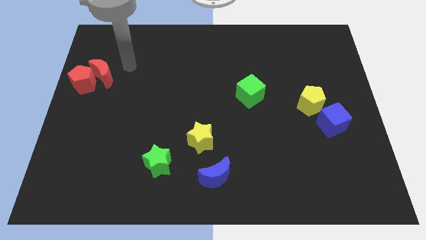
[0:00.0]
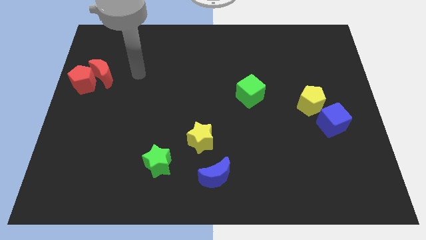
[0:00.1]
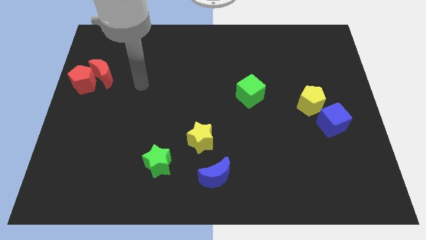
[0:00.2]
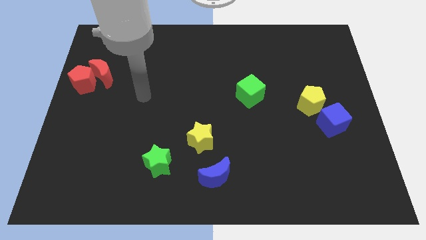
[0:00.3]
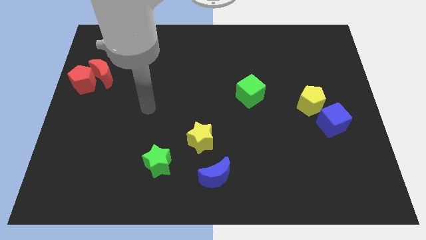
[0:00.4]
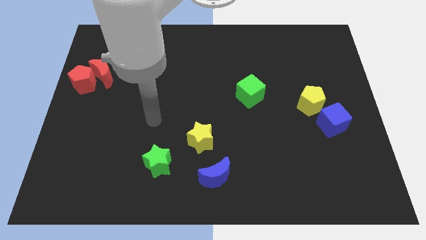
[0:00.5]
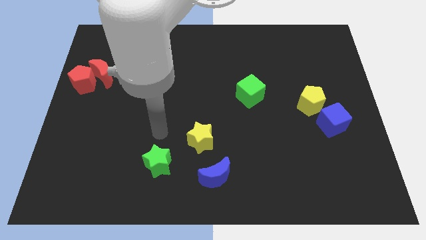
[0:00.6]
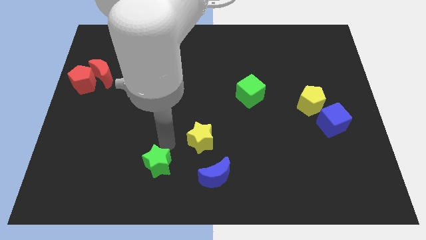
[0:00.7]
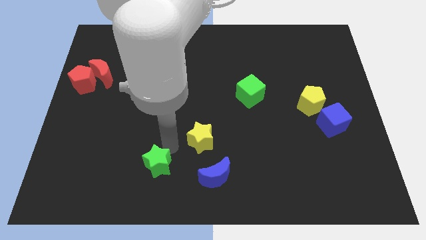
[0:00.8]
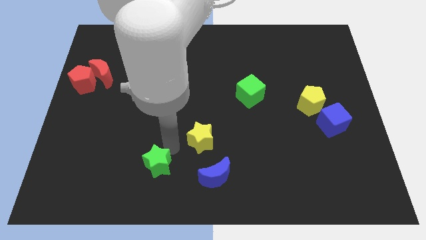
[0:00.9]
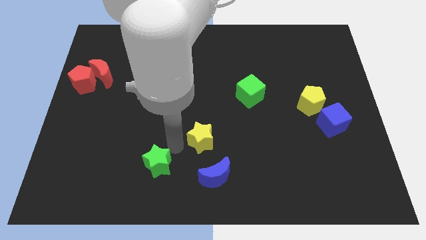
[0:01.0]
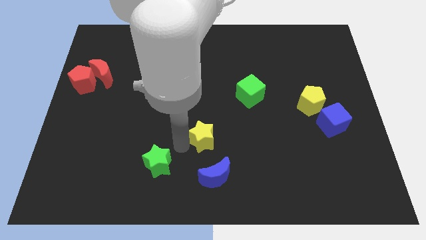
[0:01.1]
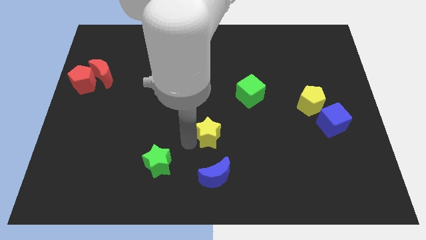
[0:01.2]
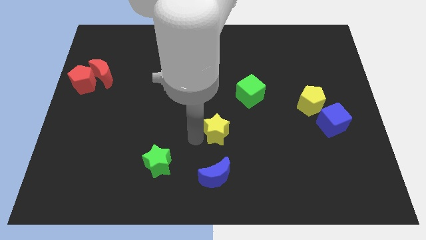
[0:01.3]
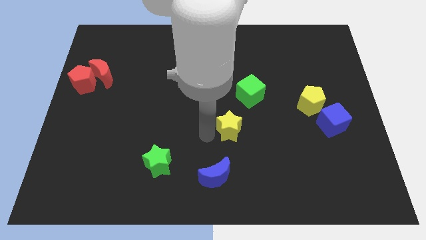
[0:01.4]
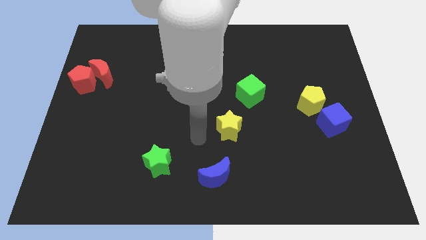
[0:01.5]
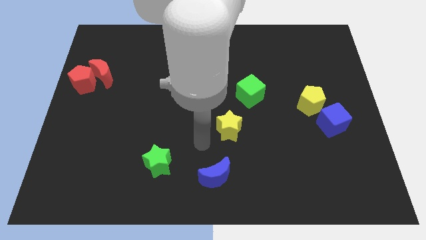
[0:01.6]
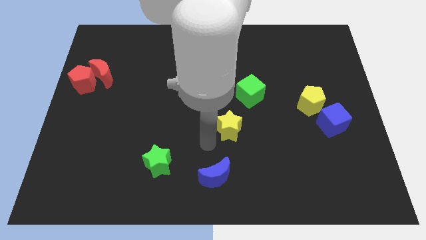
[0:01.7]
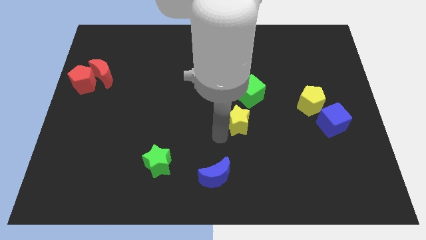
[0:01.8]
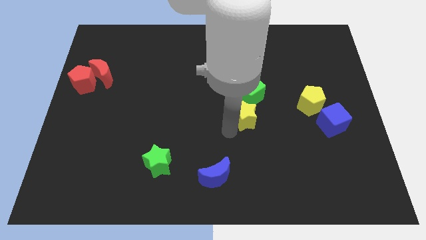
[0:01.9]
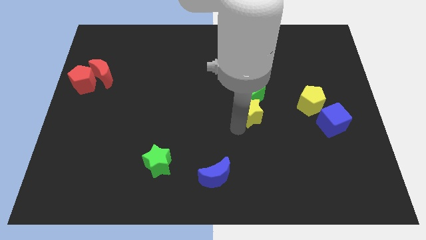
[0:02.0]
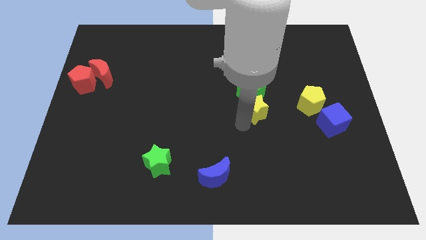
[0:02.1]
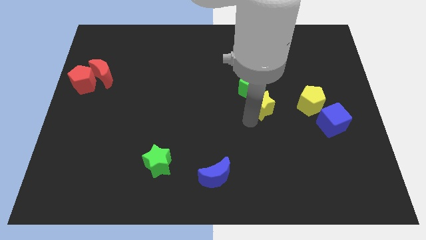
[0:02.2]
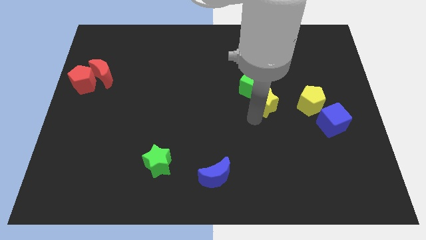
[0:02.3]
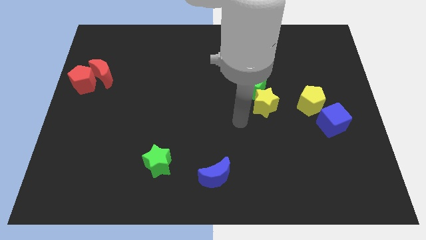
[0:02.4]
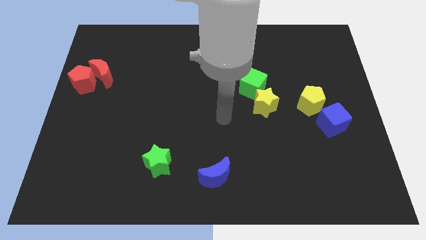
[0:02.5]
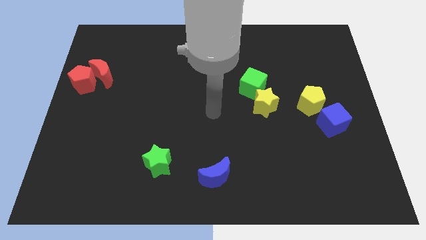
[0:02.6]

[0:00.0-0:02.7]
move the yellow star into the green cube

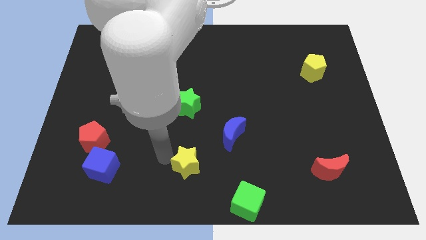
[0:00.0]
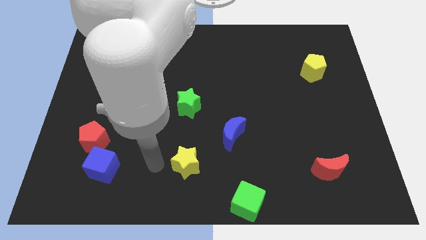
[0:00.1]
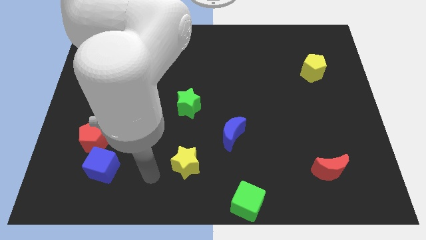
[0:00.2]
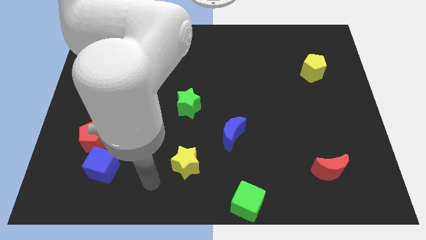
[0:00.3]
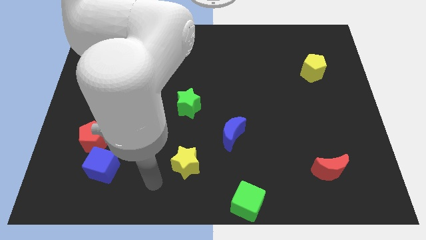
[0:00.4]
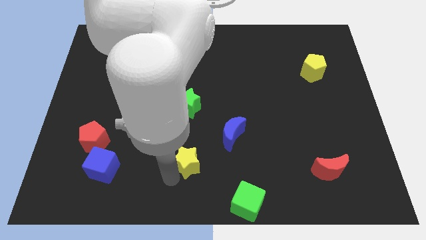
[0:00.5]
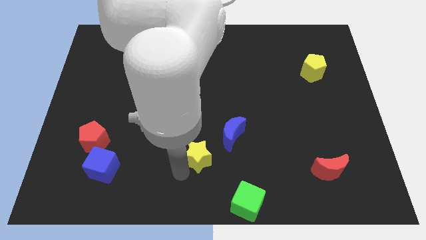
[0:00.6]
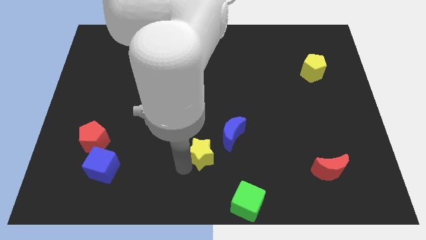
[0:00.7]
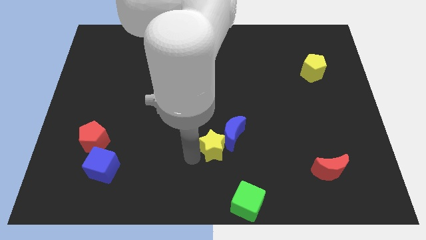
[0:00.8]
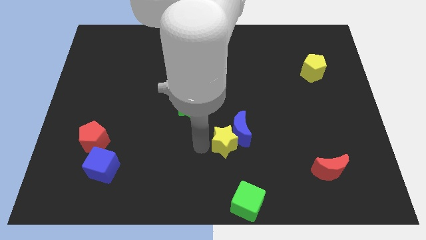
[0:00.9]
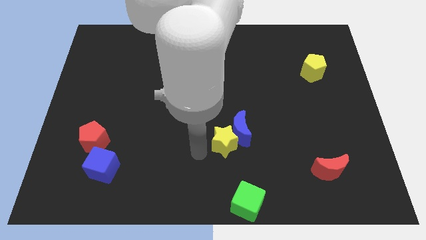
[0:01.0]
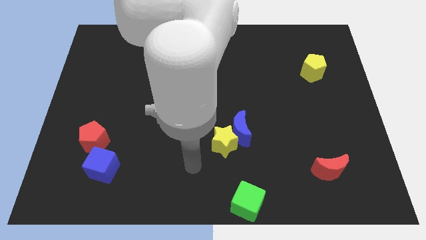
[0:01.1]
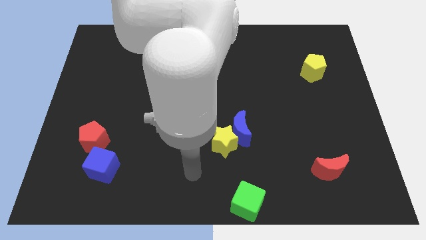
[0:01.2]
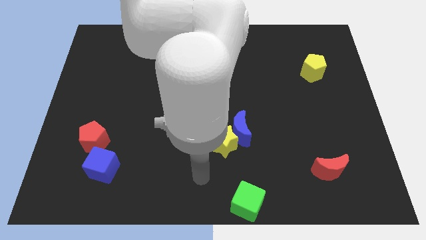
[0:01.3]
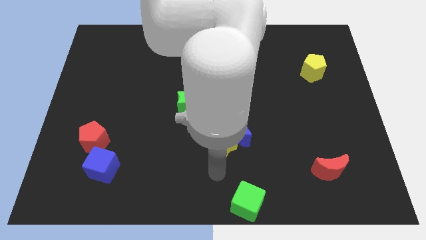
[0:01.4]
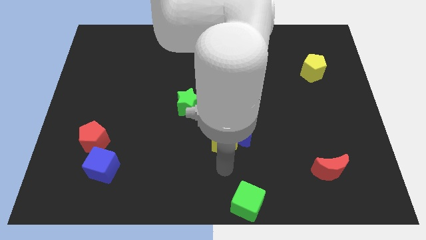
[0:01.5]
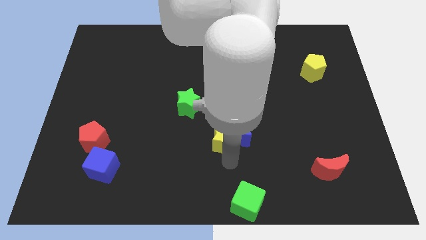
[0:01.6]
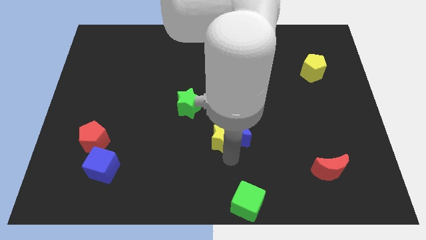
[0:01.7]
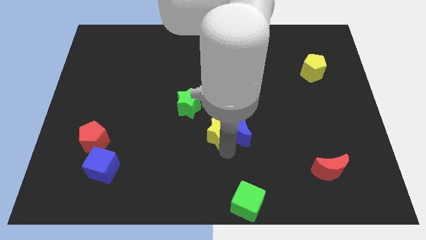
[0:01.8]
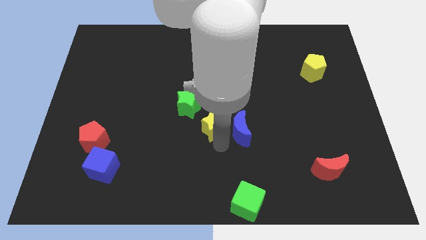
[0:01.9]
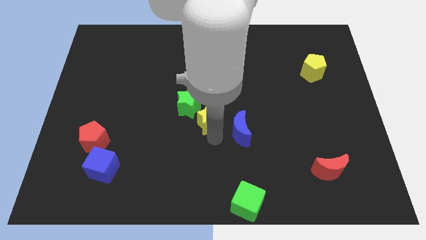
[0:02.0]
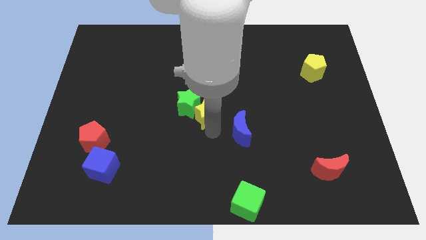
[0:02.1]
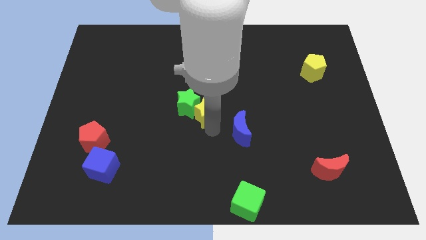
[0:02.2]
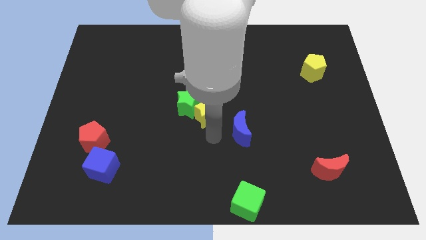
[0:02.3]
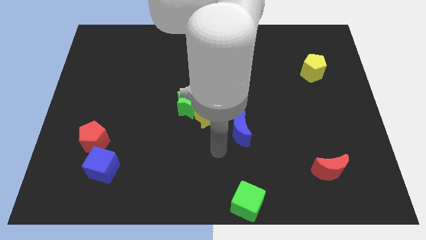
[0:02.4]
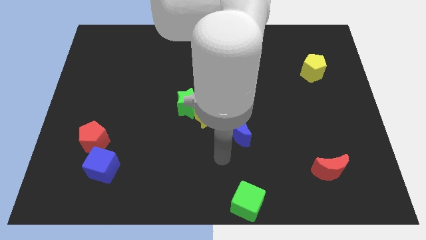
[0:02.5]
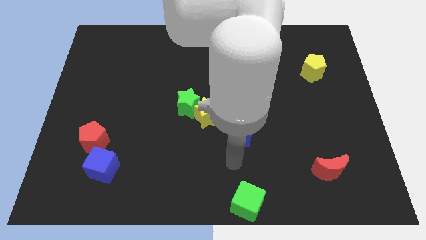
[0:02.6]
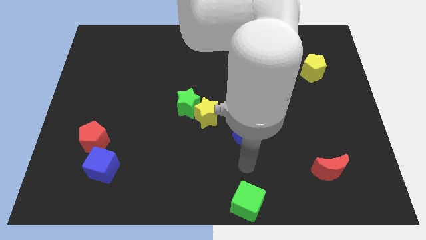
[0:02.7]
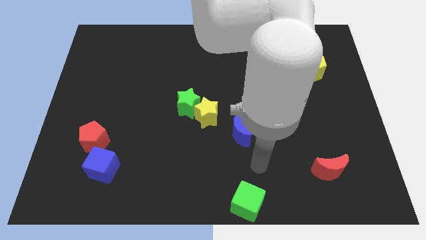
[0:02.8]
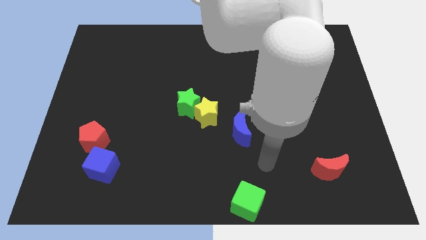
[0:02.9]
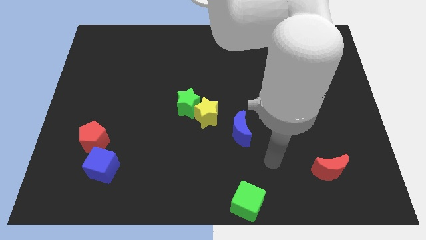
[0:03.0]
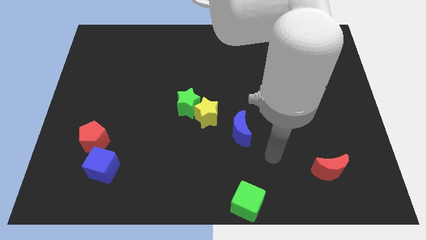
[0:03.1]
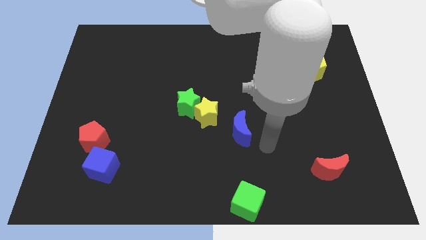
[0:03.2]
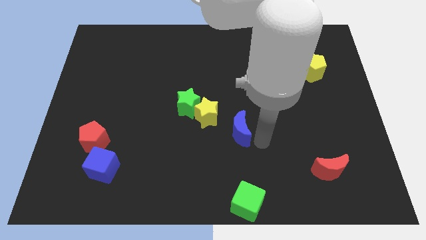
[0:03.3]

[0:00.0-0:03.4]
push the yellow star into the green star

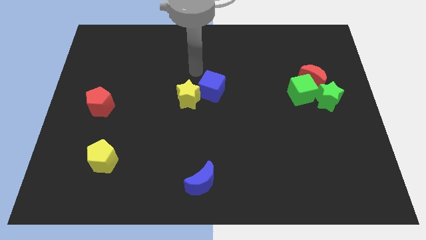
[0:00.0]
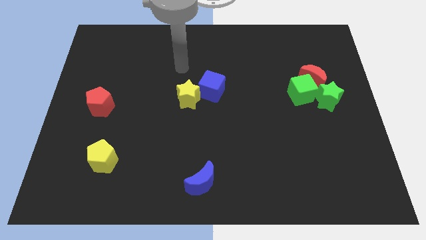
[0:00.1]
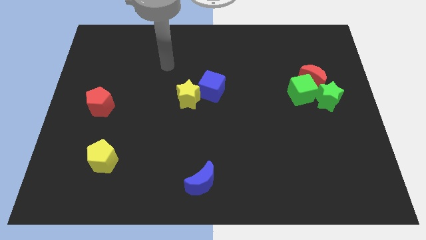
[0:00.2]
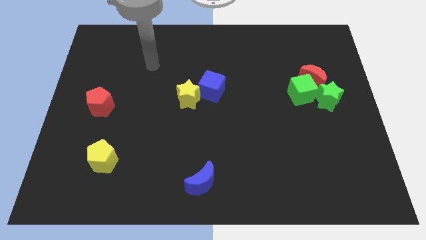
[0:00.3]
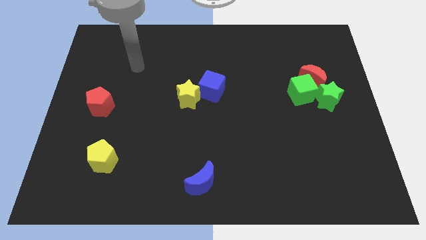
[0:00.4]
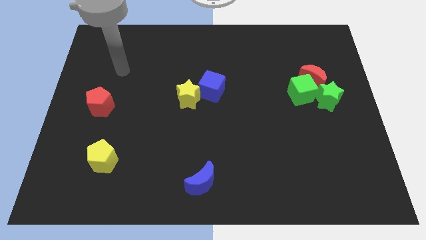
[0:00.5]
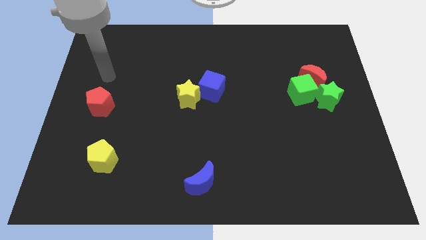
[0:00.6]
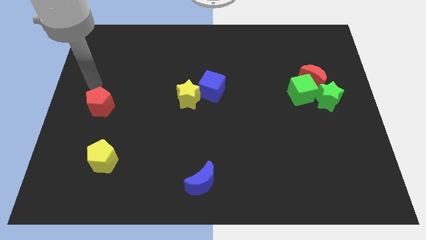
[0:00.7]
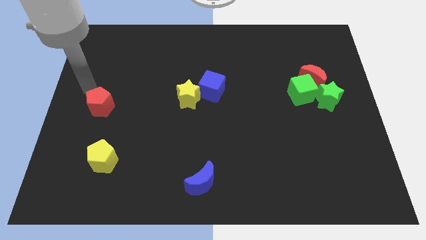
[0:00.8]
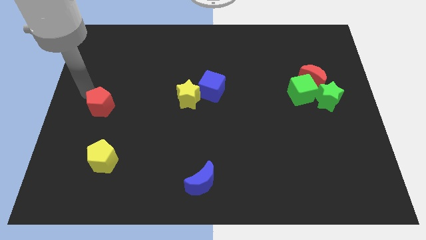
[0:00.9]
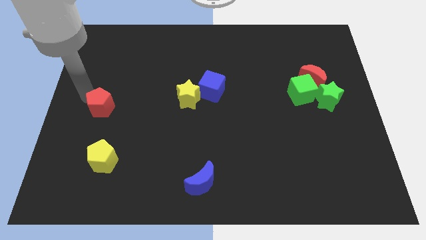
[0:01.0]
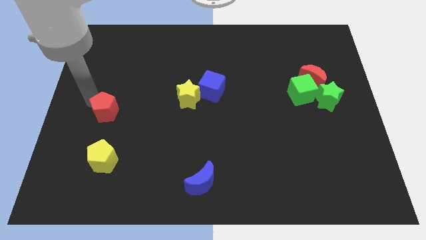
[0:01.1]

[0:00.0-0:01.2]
touch the red pentagon on the left side

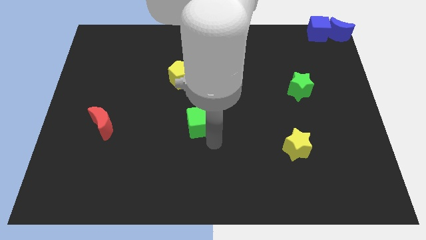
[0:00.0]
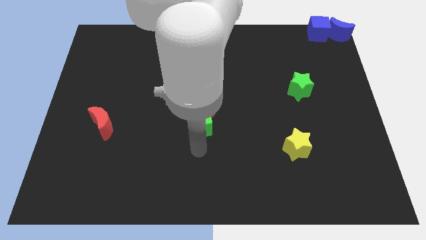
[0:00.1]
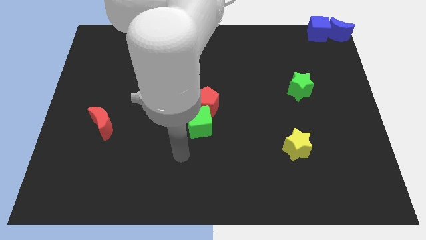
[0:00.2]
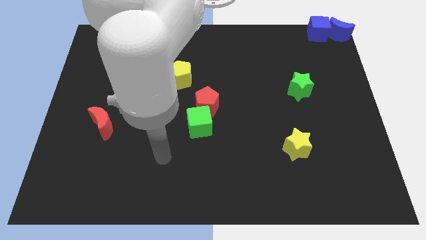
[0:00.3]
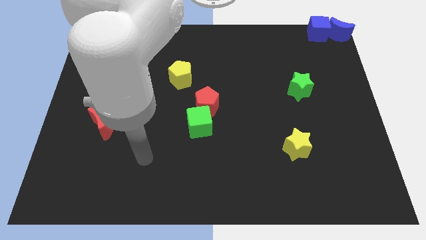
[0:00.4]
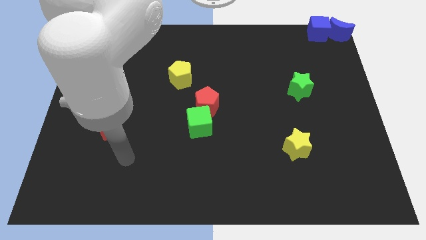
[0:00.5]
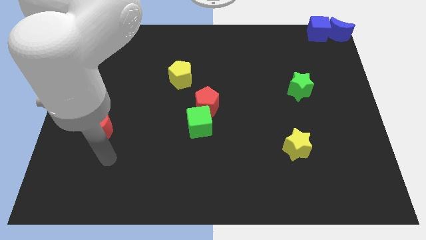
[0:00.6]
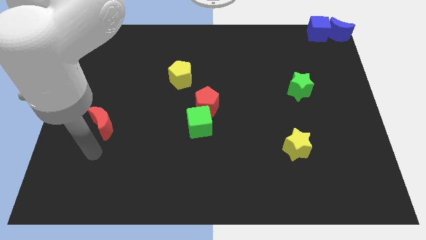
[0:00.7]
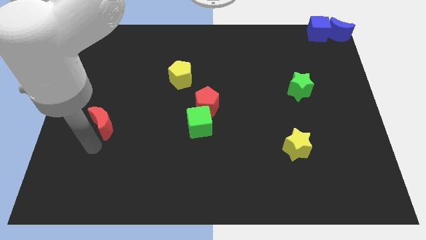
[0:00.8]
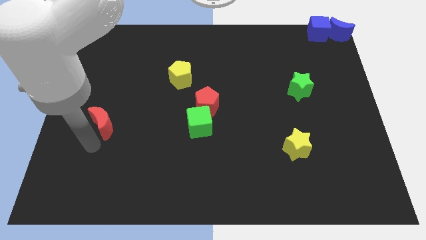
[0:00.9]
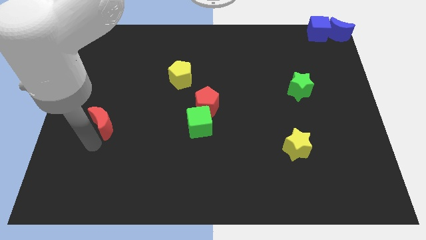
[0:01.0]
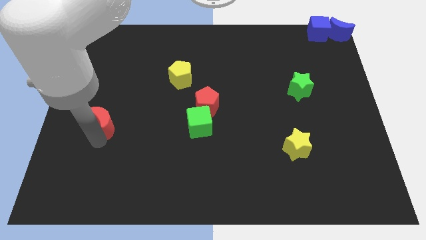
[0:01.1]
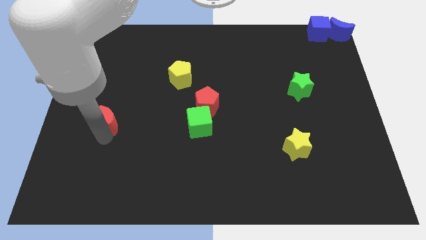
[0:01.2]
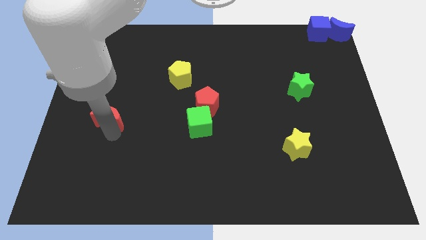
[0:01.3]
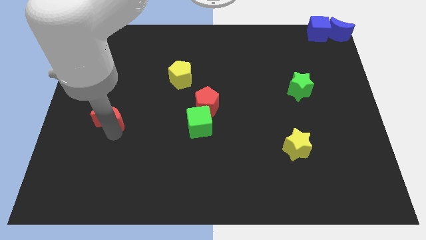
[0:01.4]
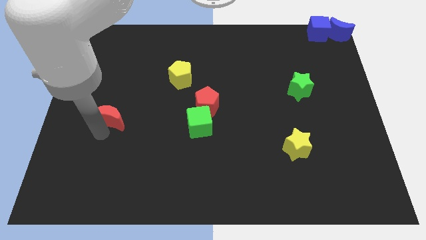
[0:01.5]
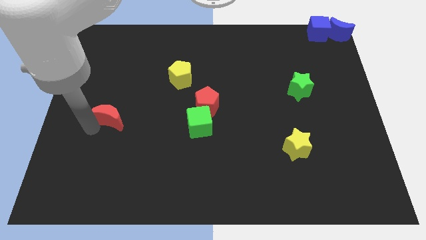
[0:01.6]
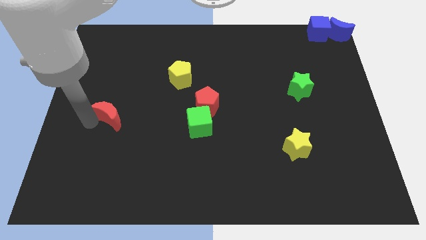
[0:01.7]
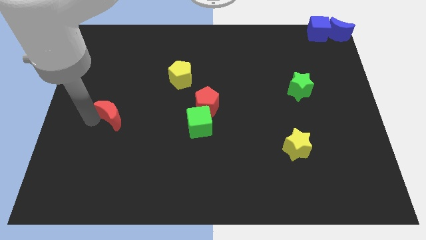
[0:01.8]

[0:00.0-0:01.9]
move your arm towards the red crescent
